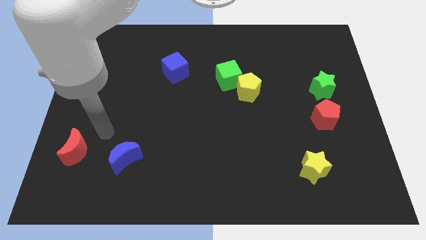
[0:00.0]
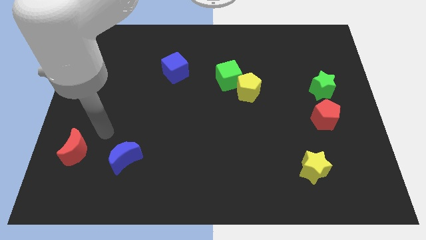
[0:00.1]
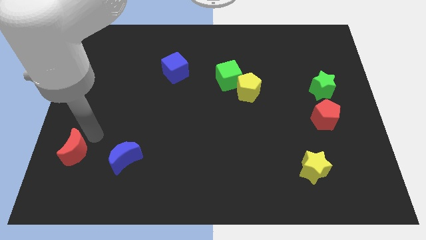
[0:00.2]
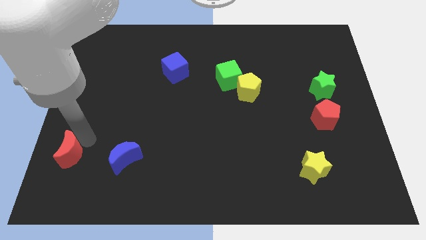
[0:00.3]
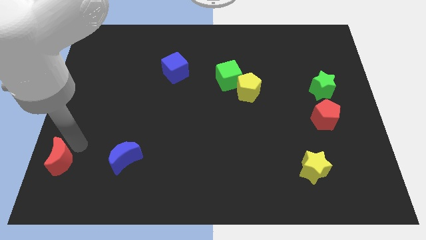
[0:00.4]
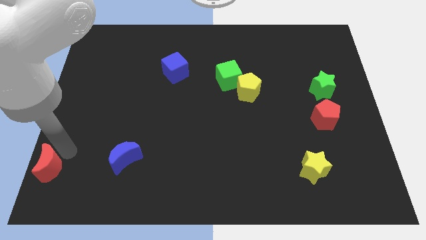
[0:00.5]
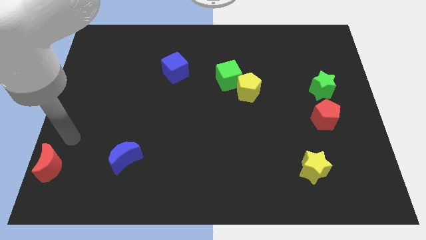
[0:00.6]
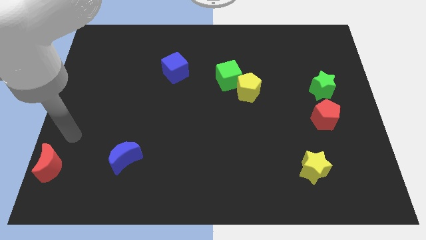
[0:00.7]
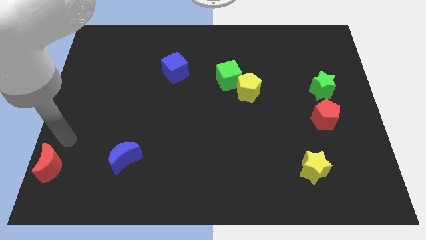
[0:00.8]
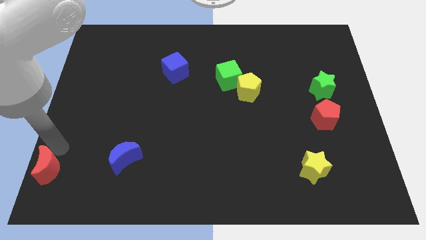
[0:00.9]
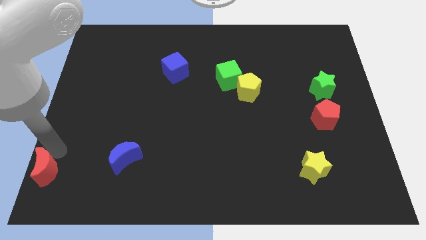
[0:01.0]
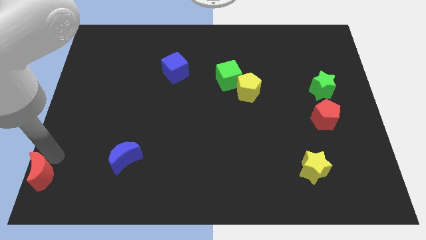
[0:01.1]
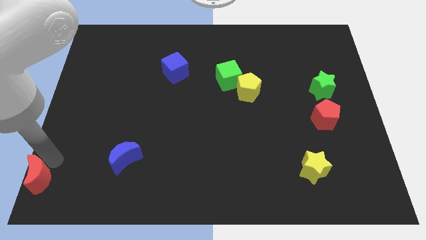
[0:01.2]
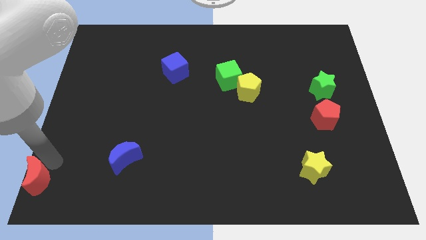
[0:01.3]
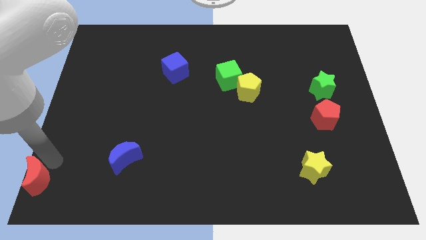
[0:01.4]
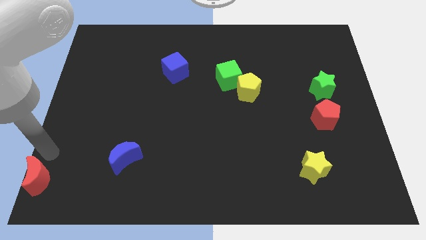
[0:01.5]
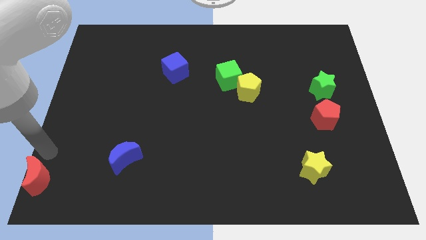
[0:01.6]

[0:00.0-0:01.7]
move the red crescent to the bottom left of the board

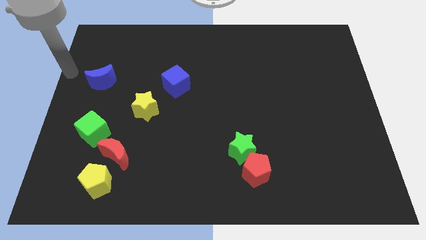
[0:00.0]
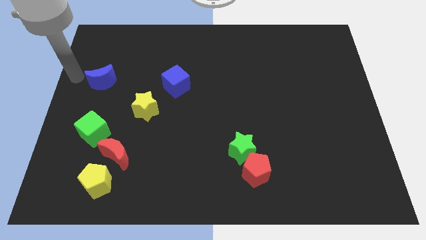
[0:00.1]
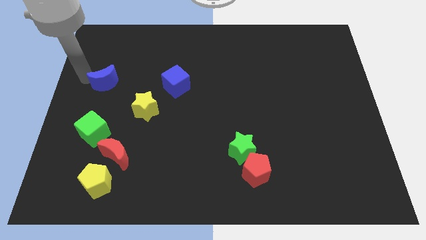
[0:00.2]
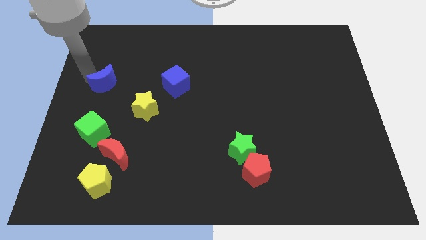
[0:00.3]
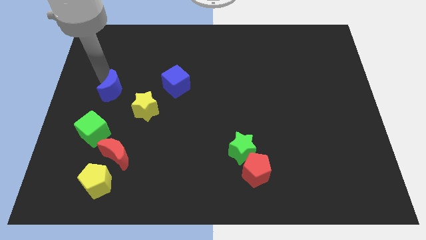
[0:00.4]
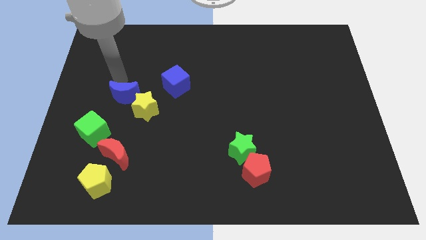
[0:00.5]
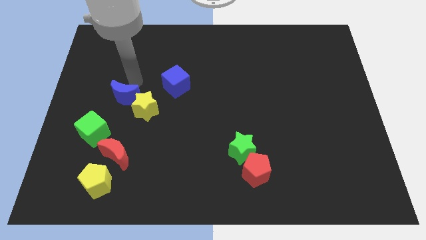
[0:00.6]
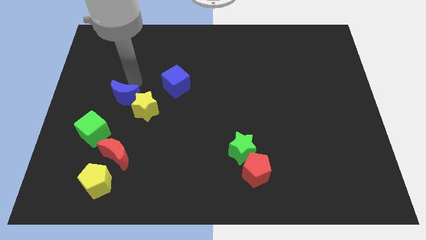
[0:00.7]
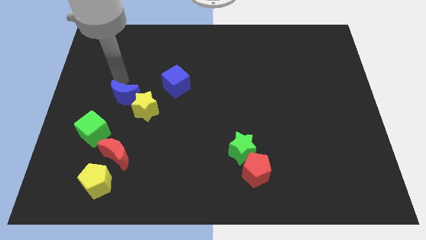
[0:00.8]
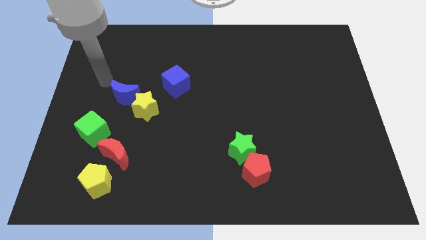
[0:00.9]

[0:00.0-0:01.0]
place blue crescent towards yellow star

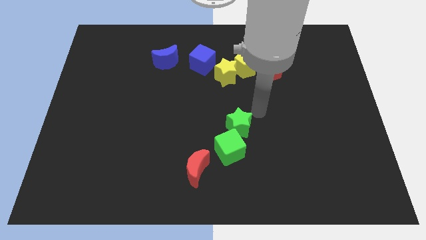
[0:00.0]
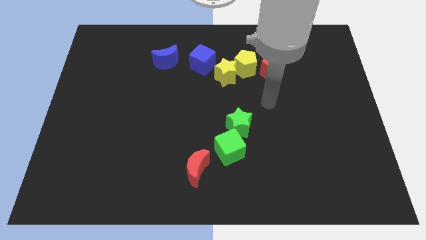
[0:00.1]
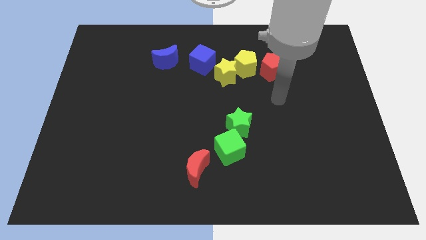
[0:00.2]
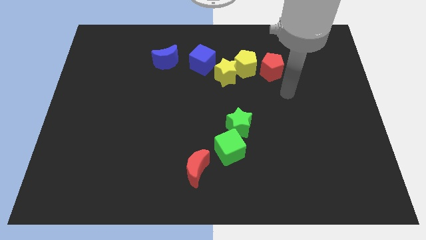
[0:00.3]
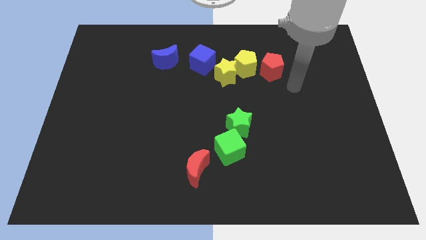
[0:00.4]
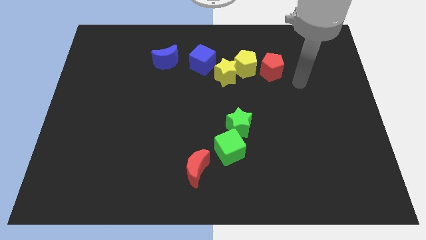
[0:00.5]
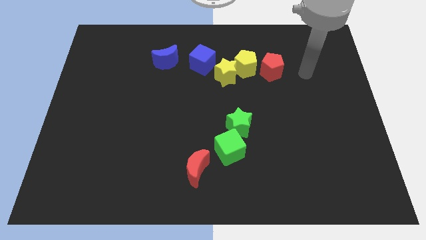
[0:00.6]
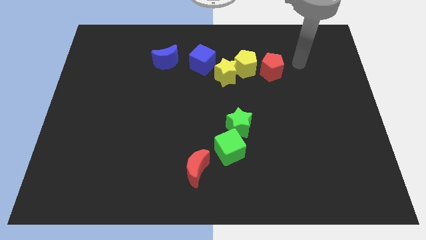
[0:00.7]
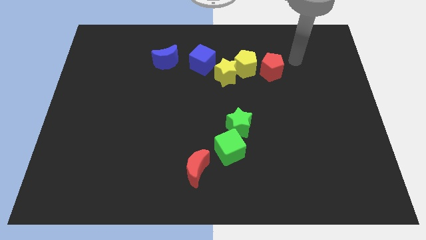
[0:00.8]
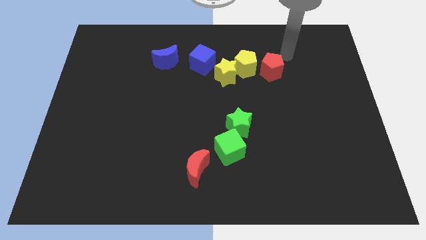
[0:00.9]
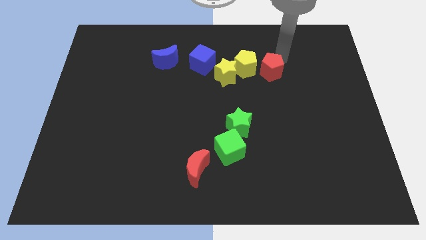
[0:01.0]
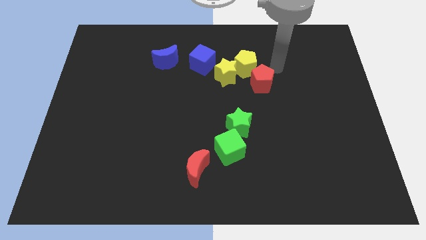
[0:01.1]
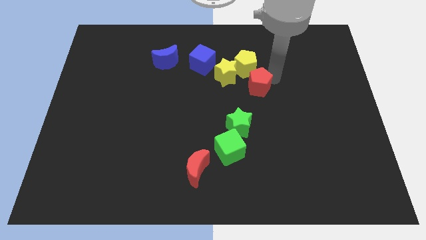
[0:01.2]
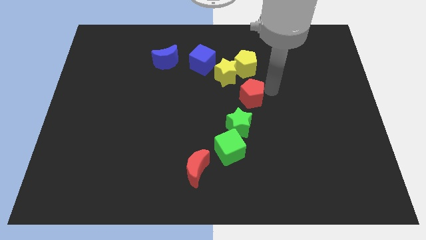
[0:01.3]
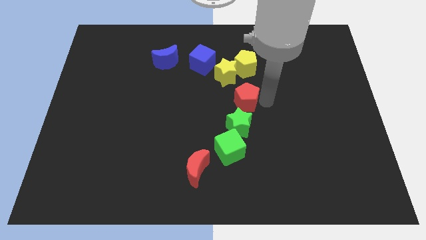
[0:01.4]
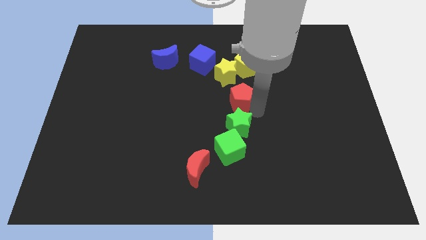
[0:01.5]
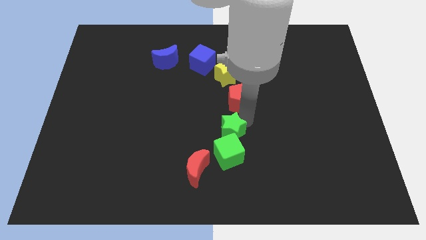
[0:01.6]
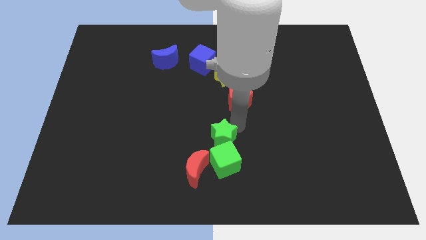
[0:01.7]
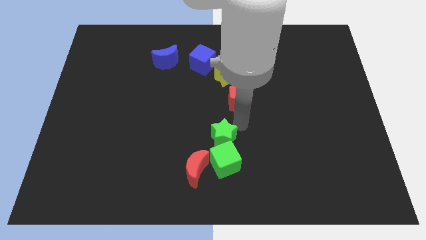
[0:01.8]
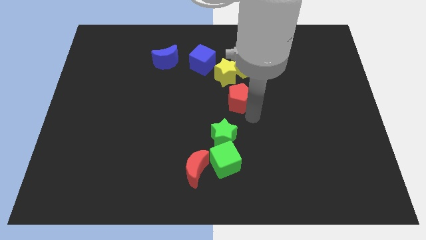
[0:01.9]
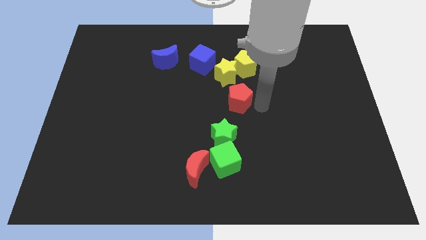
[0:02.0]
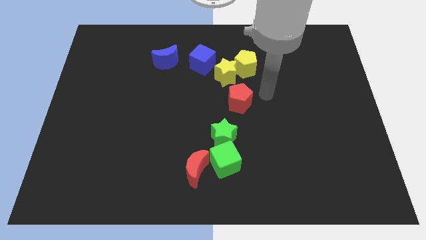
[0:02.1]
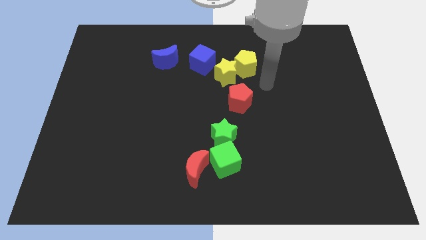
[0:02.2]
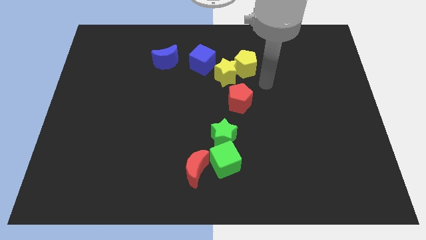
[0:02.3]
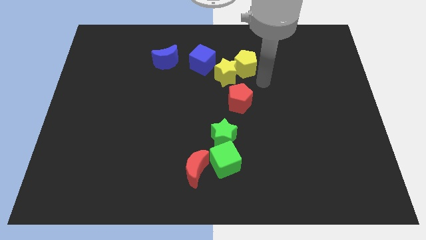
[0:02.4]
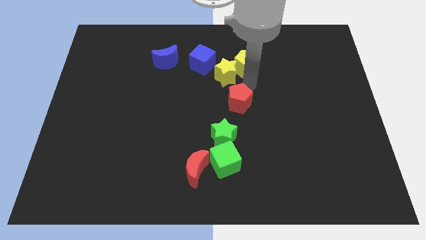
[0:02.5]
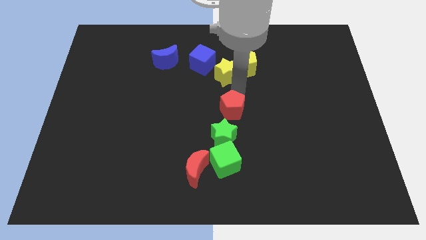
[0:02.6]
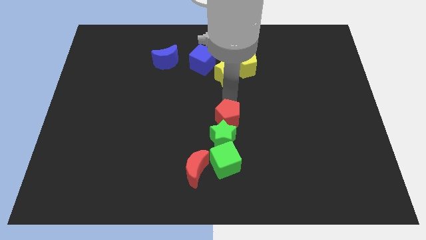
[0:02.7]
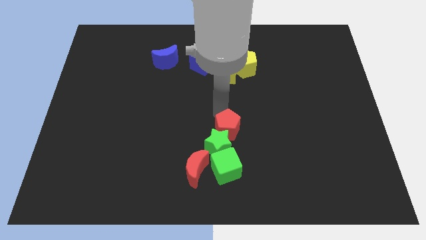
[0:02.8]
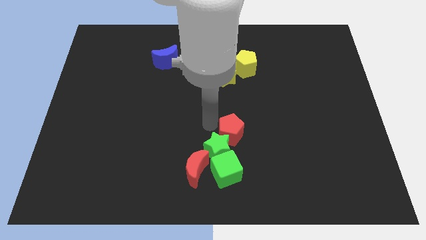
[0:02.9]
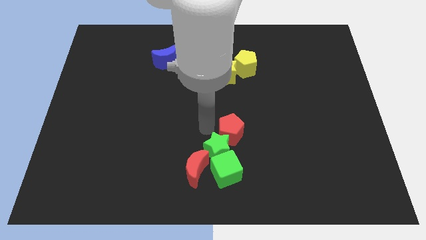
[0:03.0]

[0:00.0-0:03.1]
group up the red pentagon green blocks and red crescent at the bottom side of the table

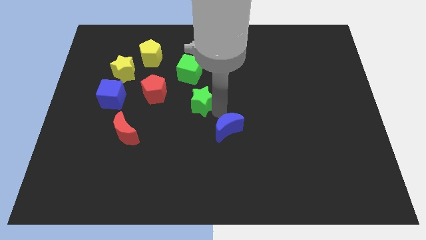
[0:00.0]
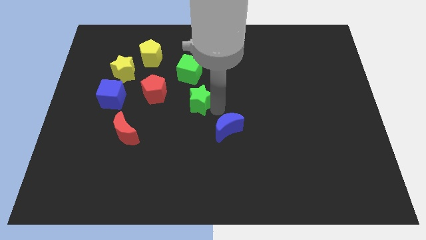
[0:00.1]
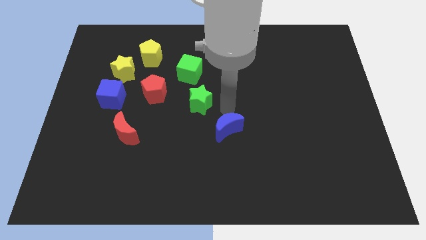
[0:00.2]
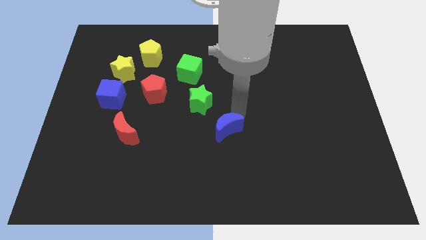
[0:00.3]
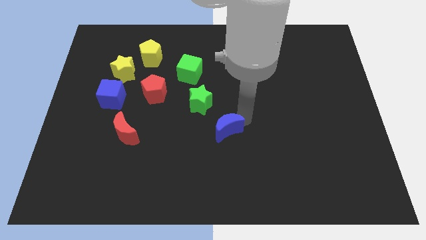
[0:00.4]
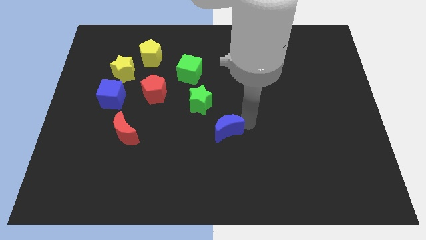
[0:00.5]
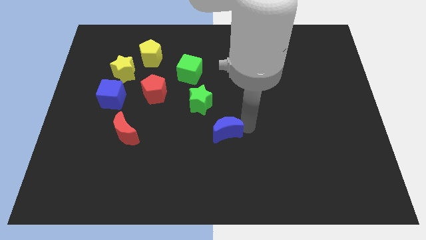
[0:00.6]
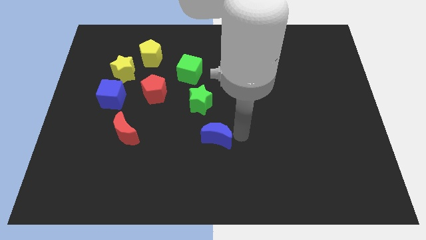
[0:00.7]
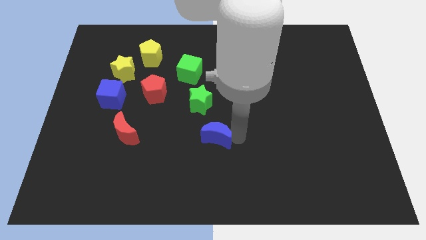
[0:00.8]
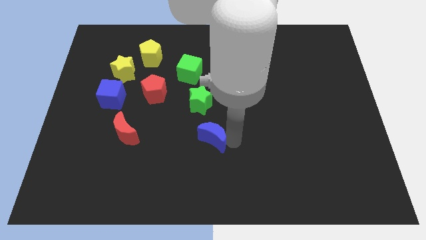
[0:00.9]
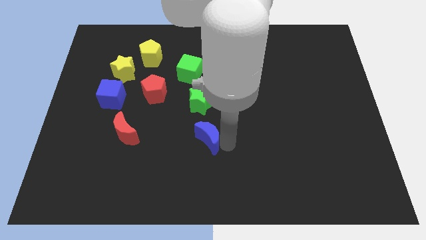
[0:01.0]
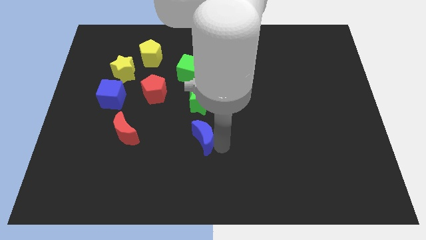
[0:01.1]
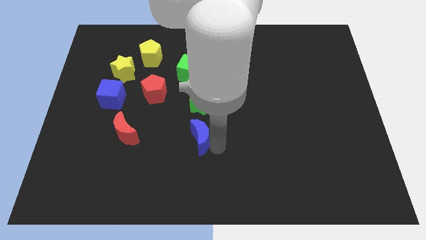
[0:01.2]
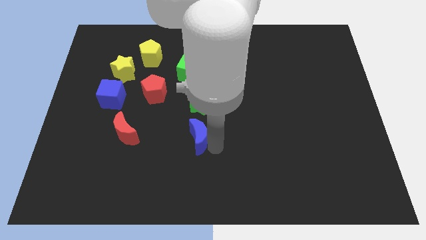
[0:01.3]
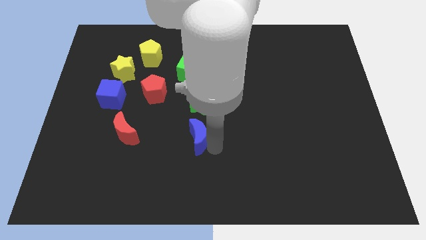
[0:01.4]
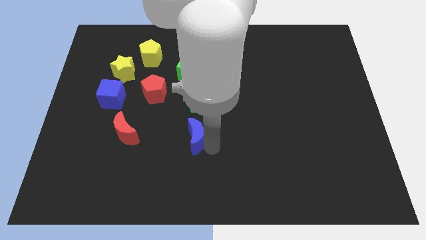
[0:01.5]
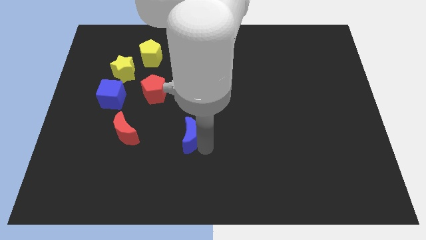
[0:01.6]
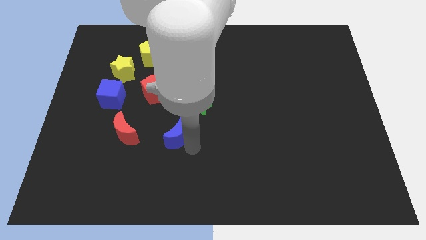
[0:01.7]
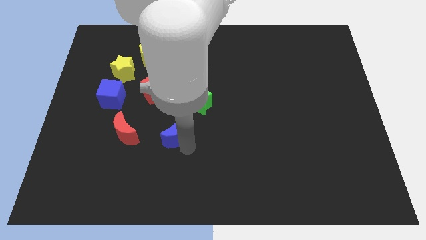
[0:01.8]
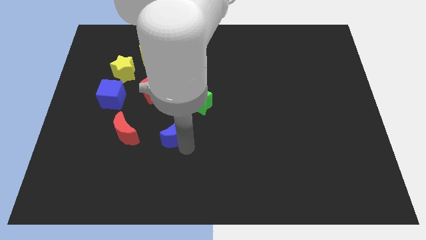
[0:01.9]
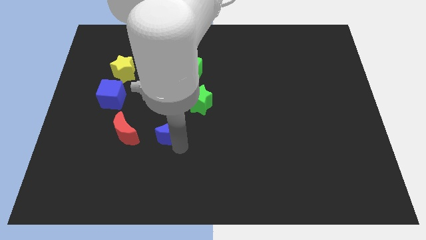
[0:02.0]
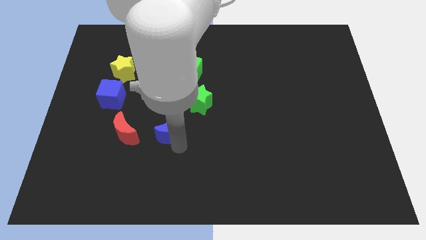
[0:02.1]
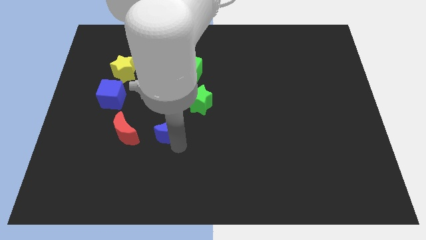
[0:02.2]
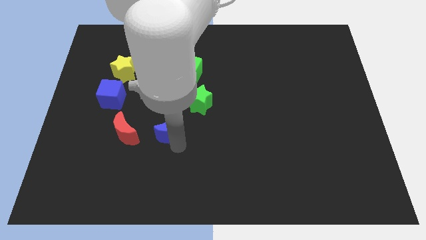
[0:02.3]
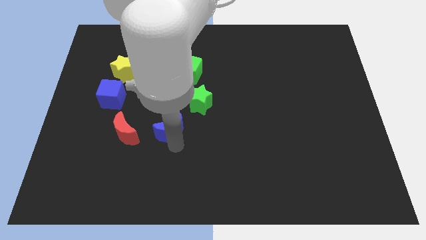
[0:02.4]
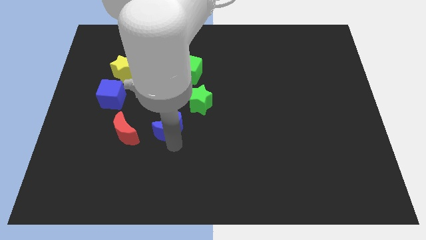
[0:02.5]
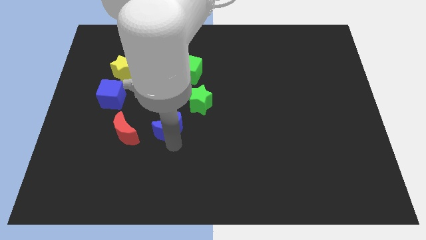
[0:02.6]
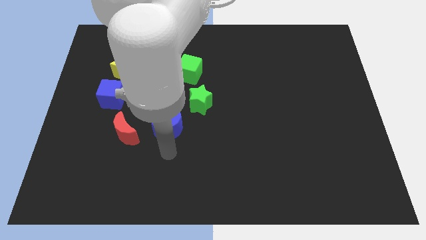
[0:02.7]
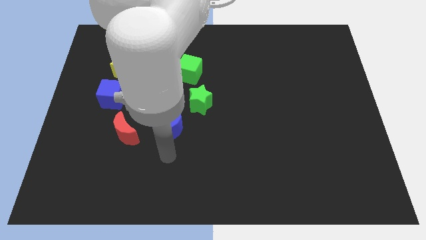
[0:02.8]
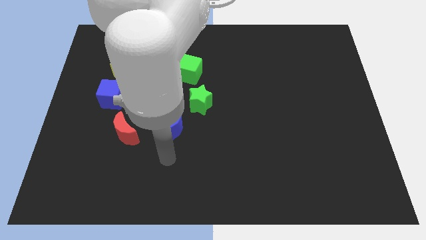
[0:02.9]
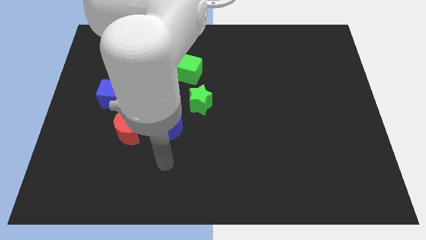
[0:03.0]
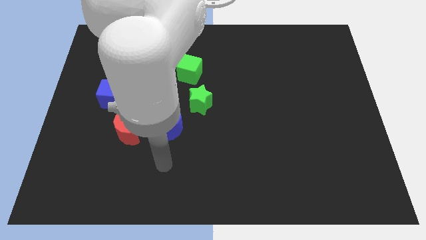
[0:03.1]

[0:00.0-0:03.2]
place the blue moon diagonally bottom left to the green star
